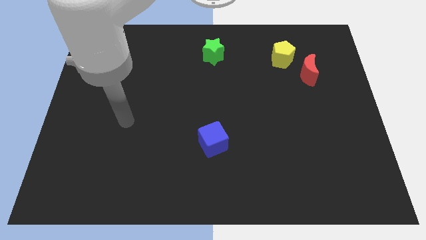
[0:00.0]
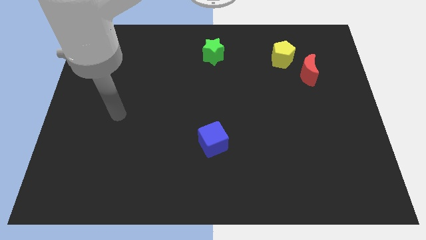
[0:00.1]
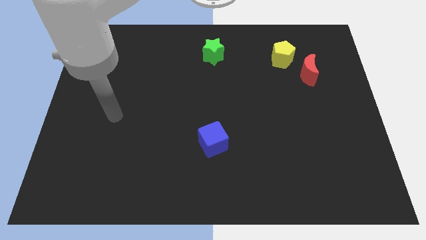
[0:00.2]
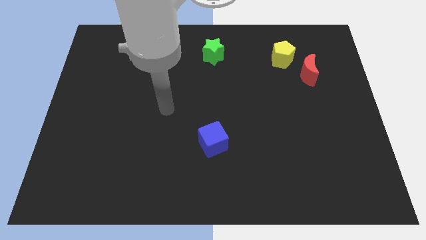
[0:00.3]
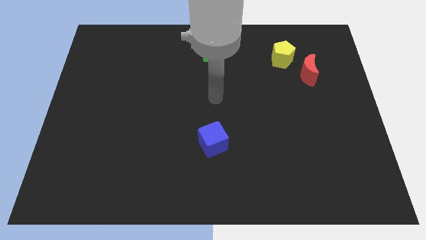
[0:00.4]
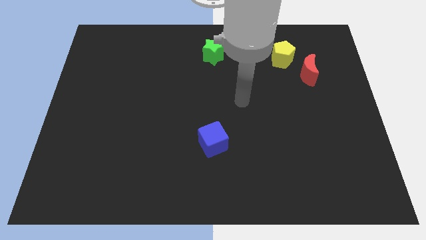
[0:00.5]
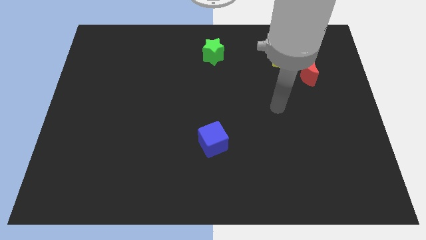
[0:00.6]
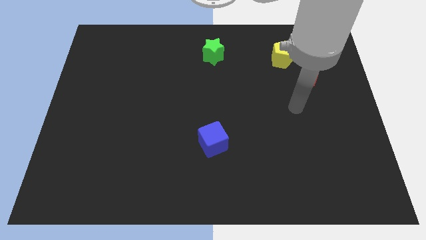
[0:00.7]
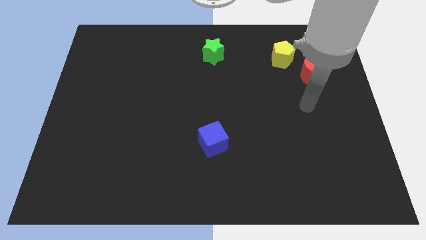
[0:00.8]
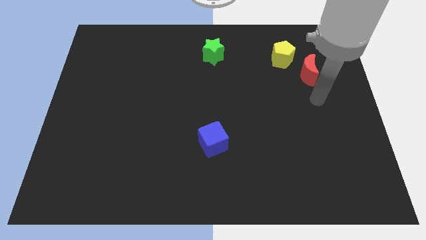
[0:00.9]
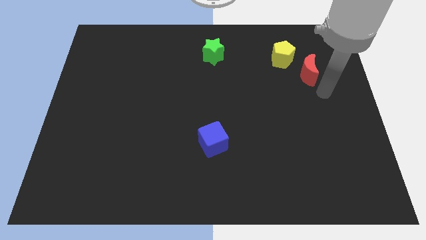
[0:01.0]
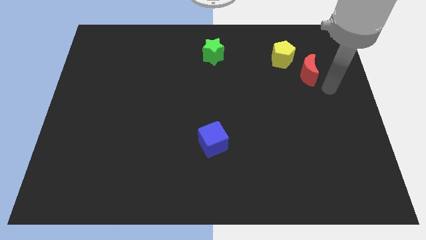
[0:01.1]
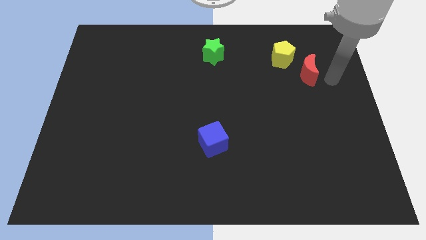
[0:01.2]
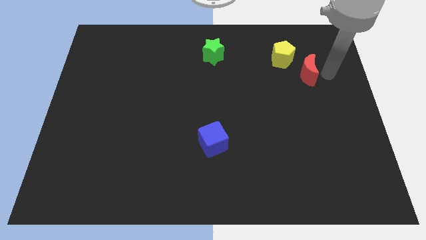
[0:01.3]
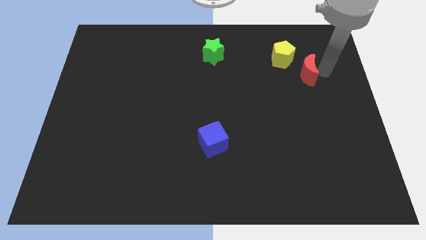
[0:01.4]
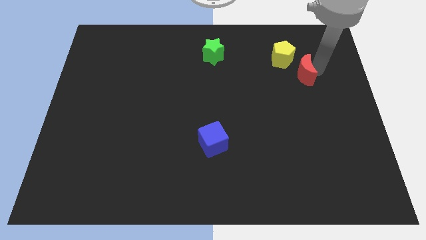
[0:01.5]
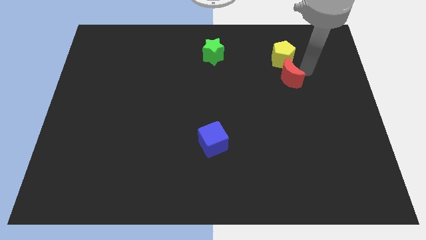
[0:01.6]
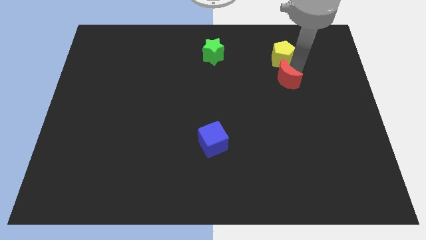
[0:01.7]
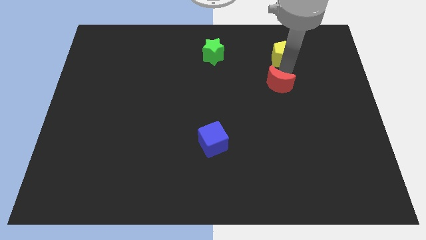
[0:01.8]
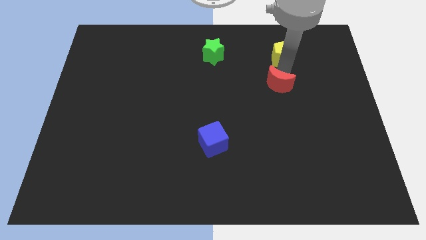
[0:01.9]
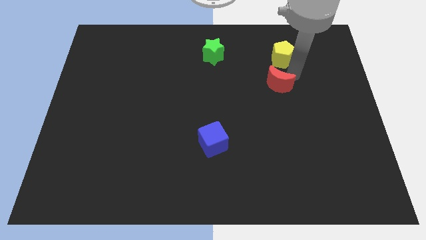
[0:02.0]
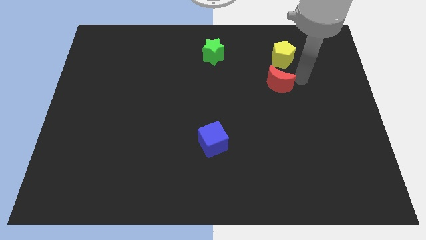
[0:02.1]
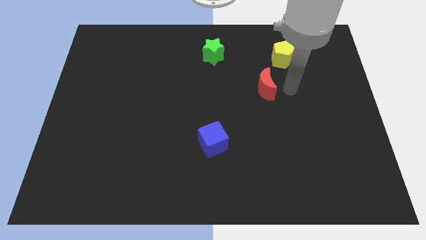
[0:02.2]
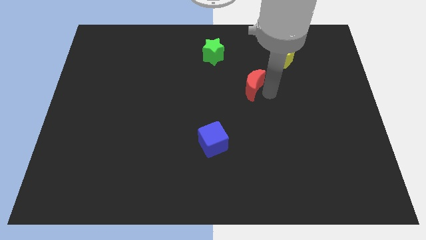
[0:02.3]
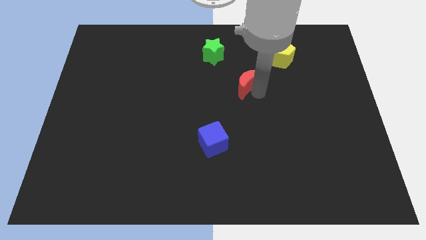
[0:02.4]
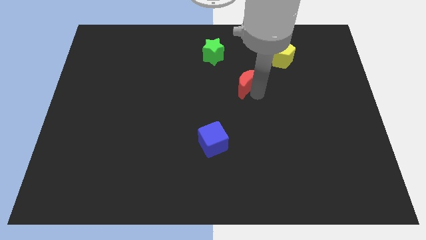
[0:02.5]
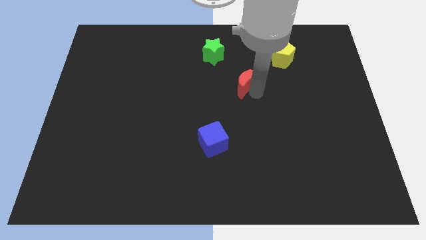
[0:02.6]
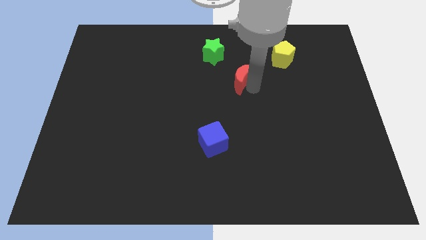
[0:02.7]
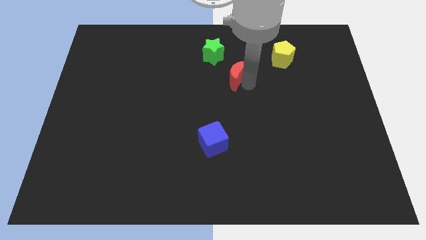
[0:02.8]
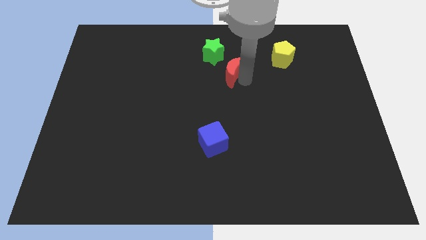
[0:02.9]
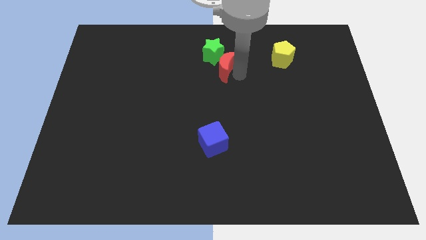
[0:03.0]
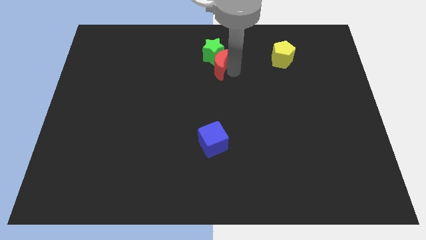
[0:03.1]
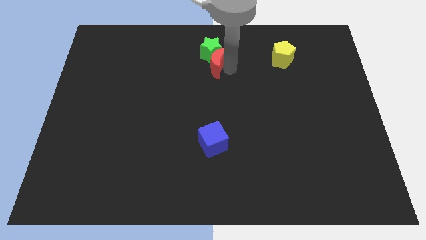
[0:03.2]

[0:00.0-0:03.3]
put the moon close to the green block

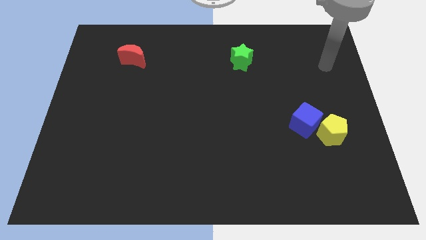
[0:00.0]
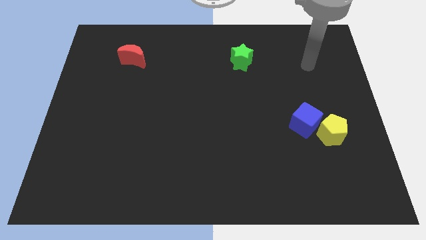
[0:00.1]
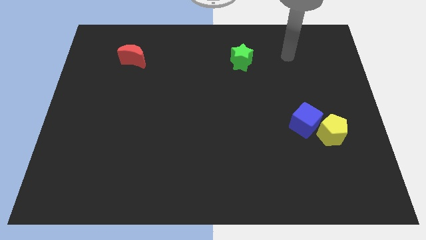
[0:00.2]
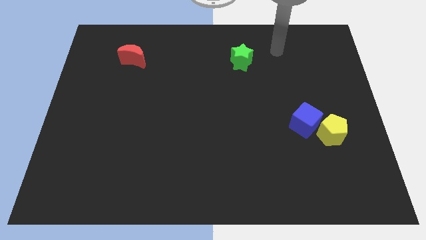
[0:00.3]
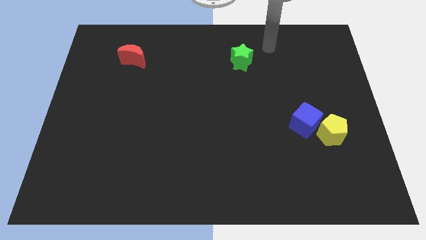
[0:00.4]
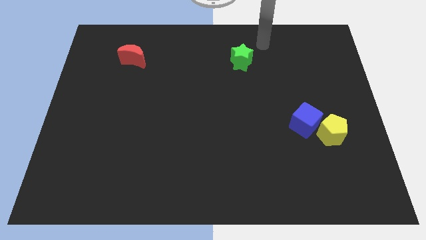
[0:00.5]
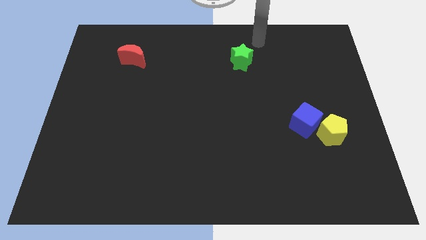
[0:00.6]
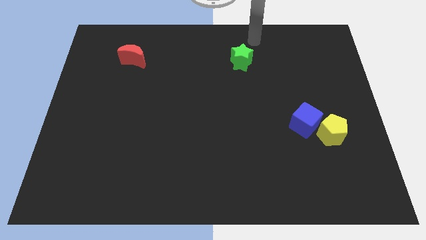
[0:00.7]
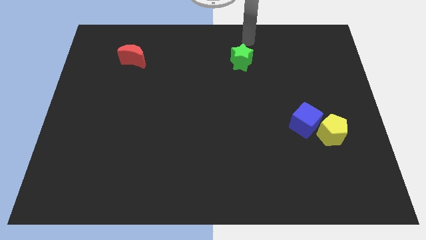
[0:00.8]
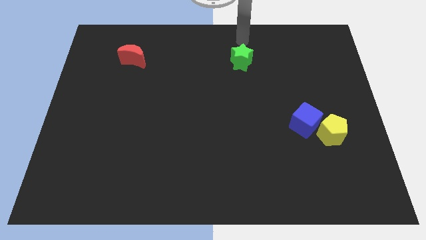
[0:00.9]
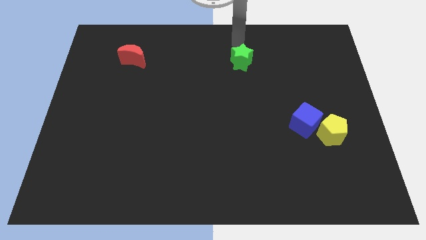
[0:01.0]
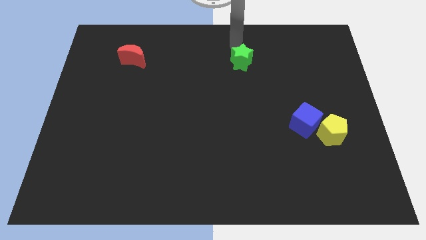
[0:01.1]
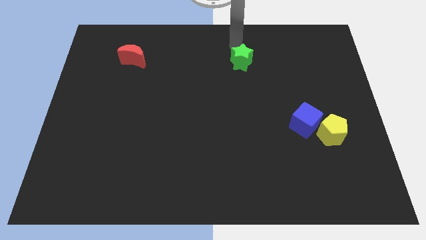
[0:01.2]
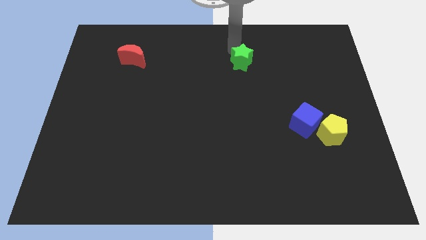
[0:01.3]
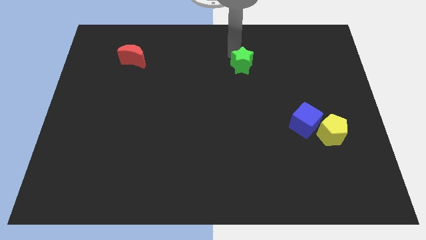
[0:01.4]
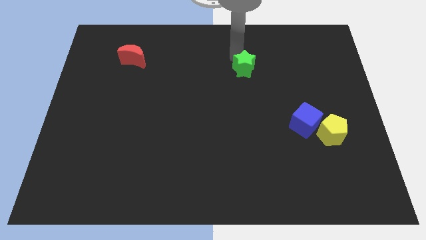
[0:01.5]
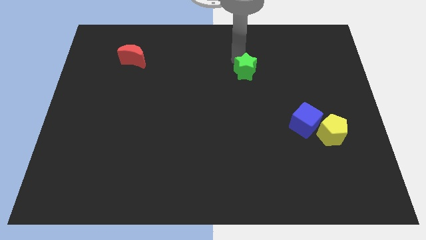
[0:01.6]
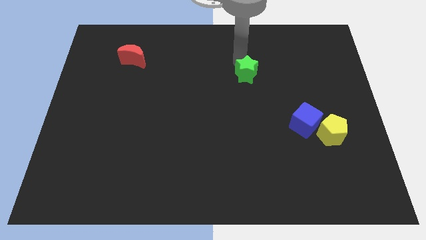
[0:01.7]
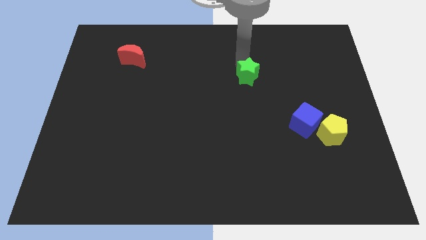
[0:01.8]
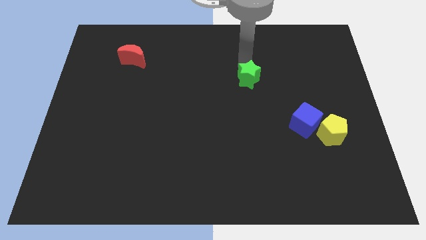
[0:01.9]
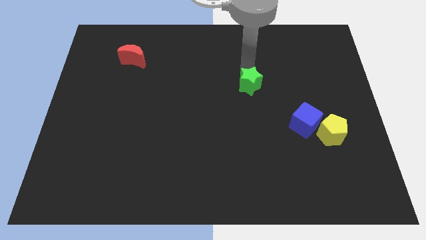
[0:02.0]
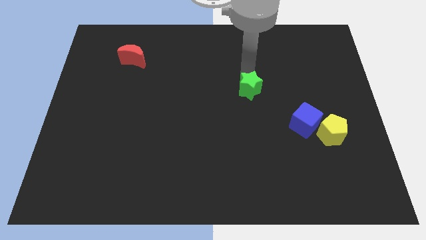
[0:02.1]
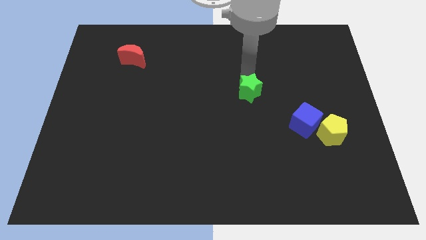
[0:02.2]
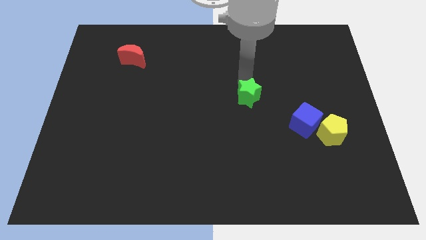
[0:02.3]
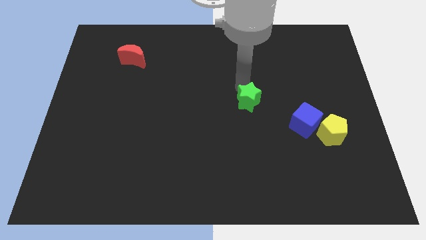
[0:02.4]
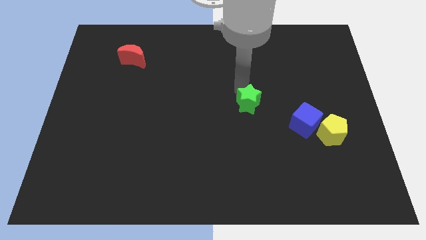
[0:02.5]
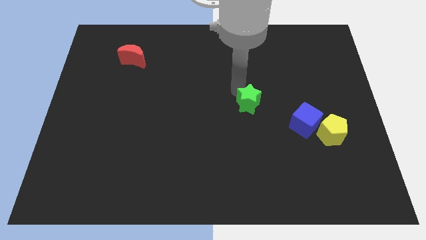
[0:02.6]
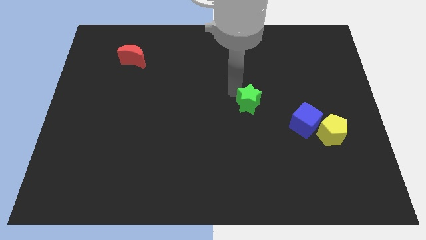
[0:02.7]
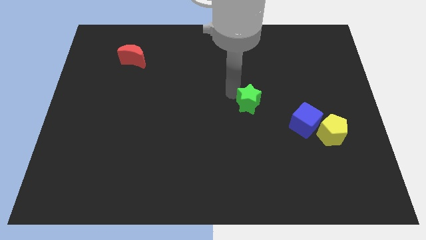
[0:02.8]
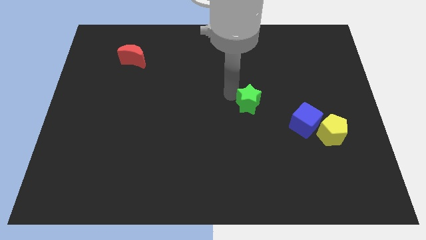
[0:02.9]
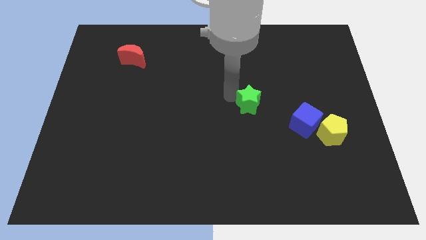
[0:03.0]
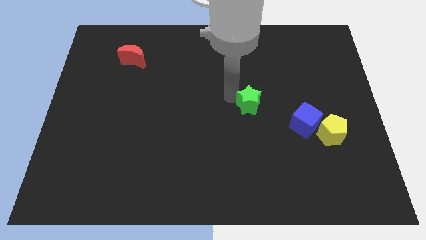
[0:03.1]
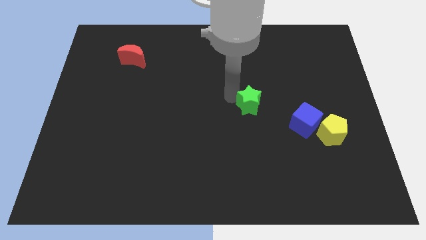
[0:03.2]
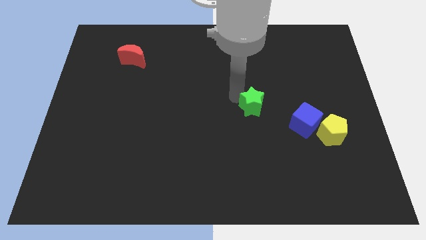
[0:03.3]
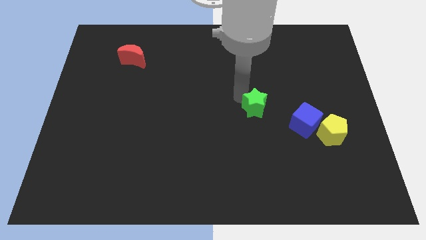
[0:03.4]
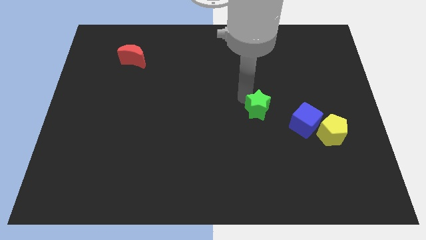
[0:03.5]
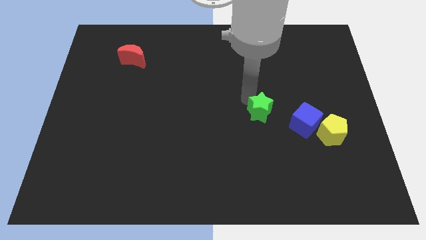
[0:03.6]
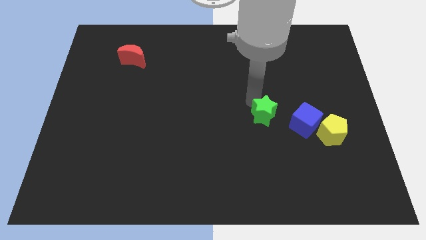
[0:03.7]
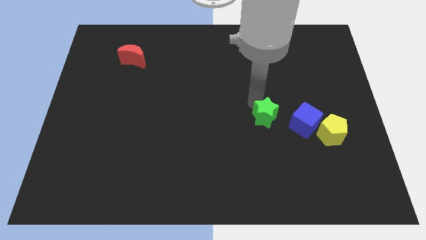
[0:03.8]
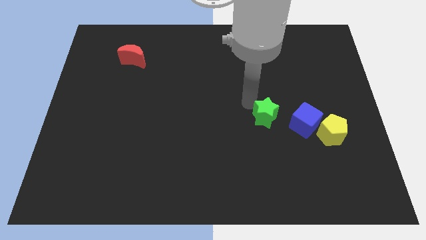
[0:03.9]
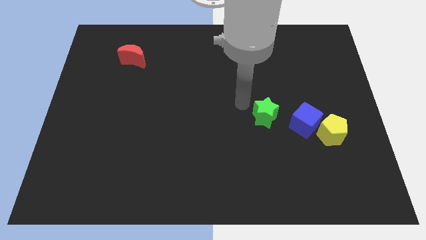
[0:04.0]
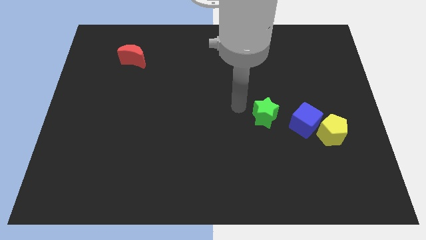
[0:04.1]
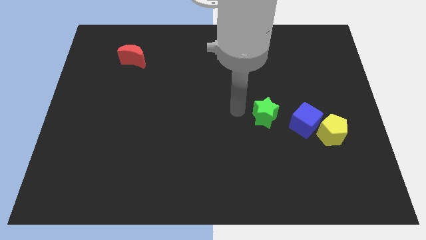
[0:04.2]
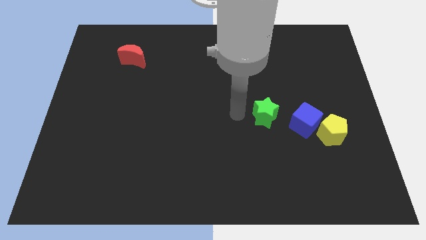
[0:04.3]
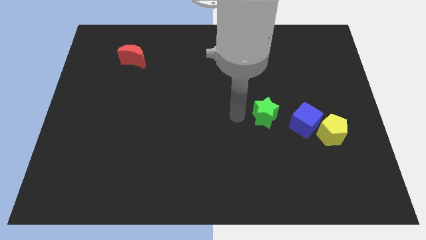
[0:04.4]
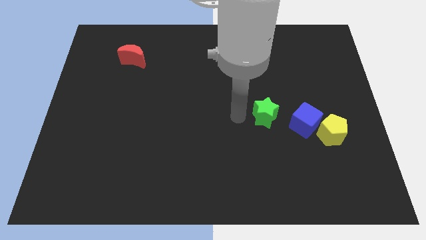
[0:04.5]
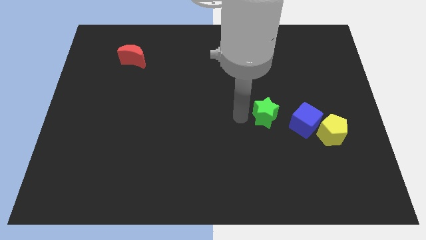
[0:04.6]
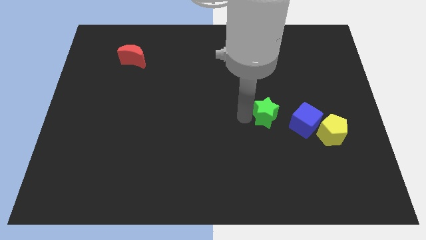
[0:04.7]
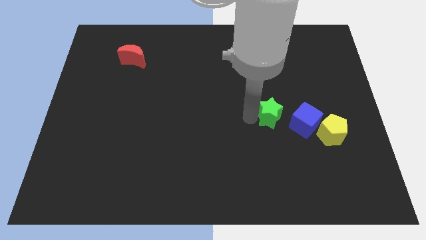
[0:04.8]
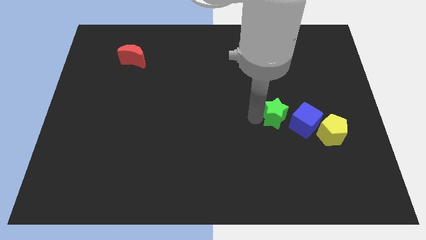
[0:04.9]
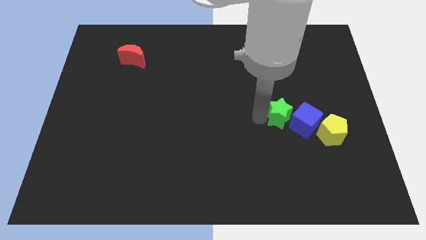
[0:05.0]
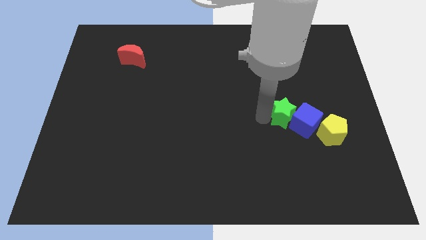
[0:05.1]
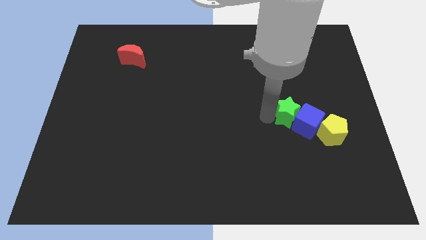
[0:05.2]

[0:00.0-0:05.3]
slide the star towards the cube

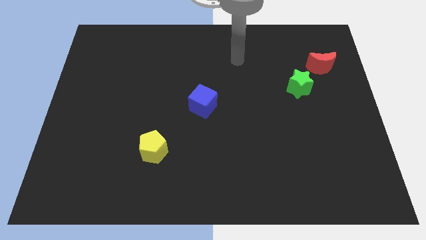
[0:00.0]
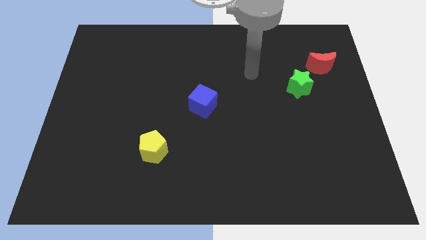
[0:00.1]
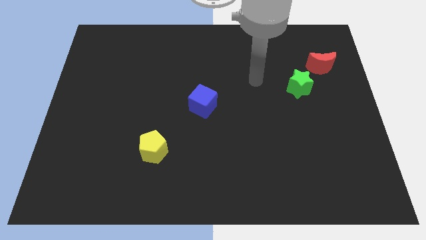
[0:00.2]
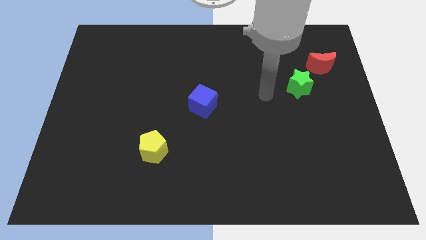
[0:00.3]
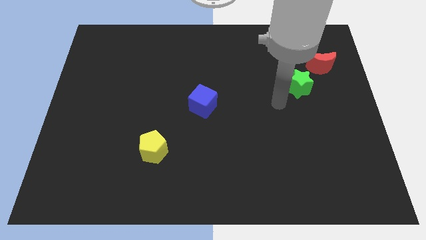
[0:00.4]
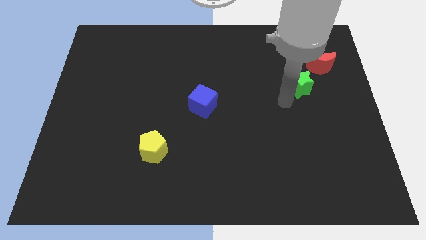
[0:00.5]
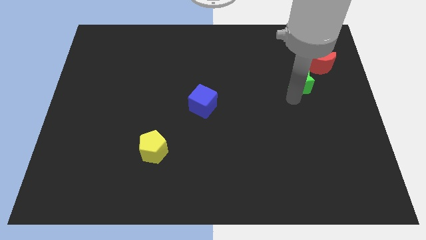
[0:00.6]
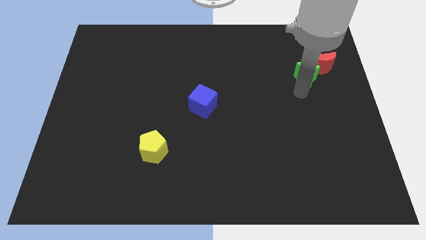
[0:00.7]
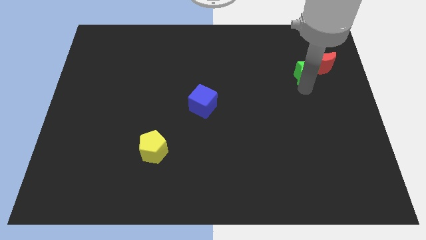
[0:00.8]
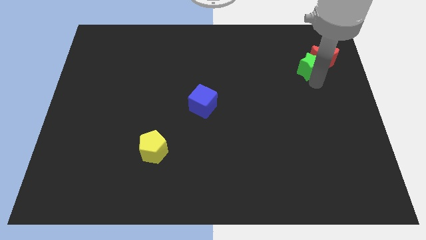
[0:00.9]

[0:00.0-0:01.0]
push the star to the red block
